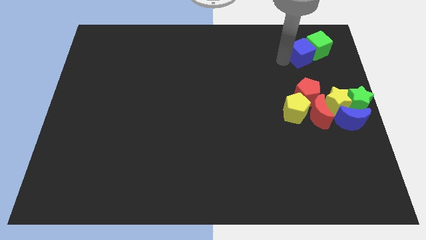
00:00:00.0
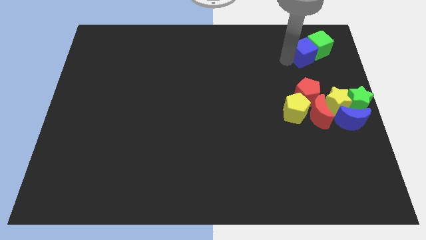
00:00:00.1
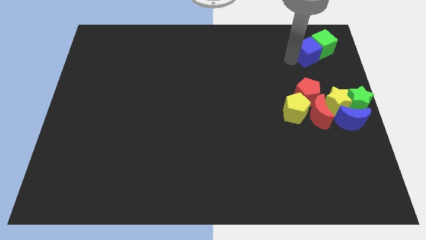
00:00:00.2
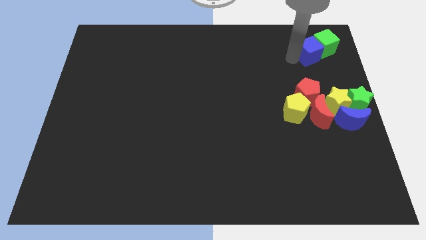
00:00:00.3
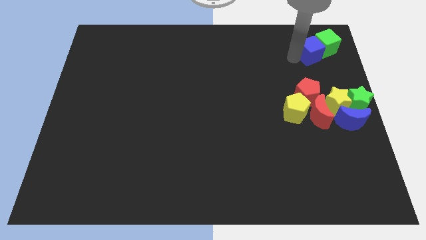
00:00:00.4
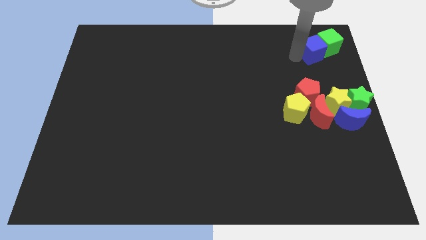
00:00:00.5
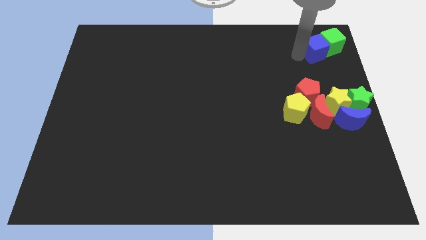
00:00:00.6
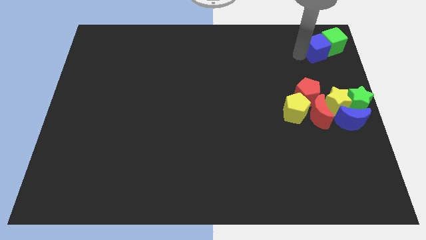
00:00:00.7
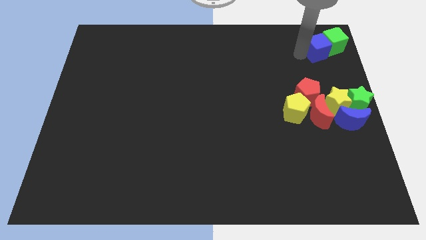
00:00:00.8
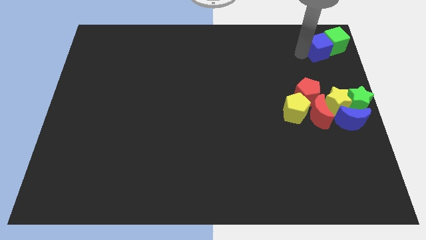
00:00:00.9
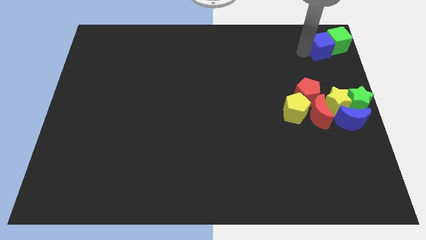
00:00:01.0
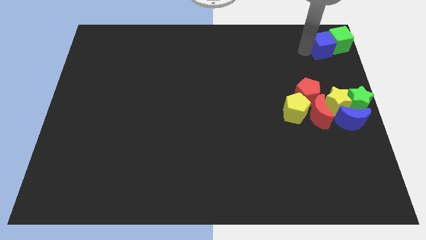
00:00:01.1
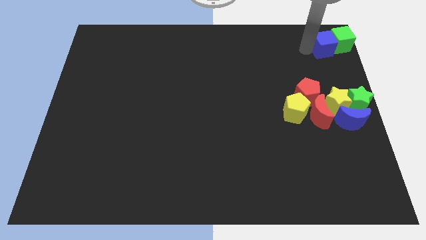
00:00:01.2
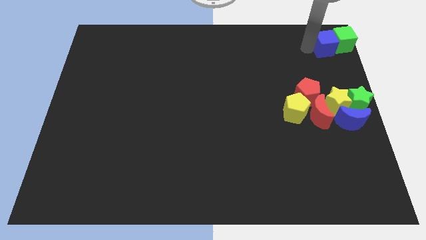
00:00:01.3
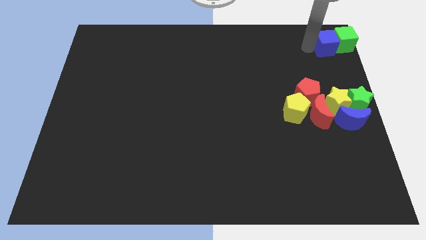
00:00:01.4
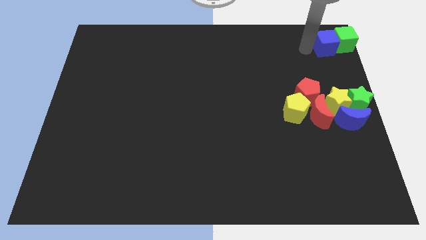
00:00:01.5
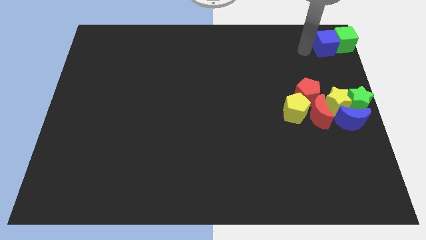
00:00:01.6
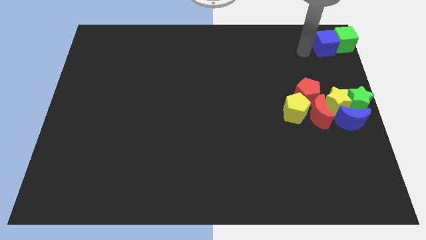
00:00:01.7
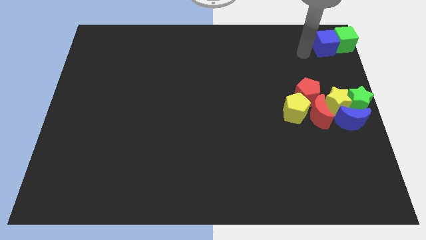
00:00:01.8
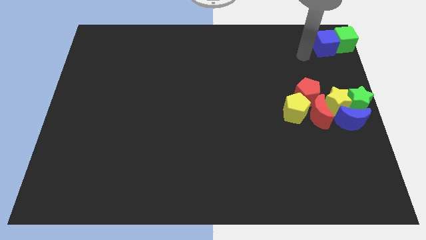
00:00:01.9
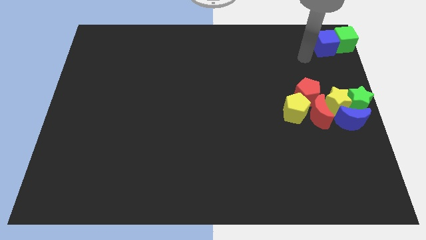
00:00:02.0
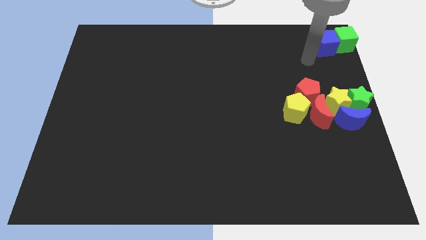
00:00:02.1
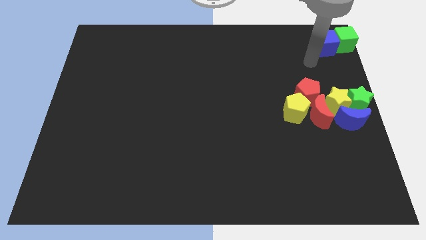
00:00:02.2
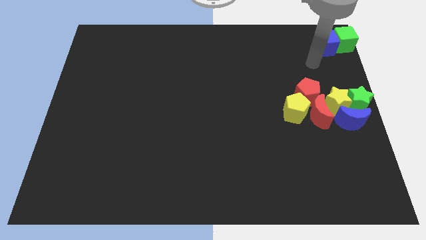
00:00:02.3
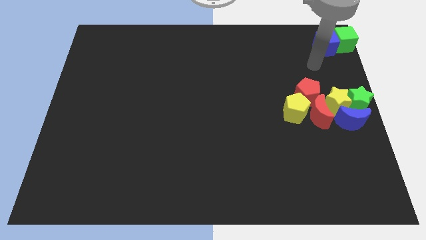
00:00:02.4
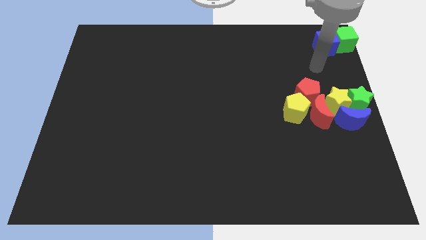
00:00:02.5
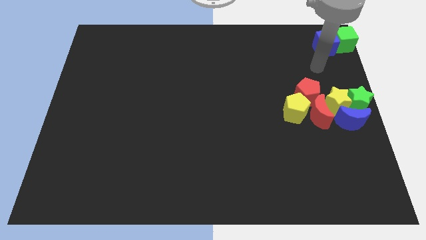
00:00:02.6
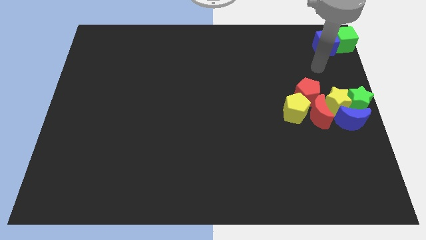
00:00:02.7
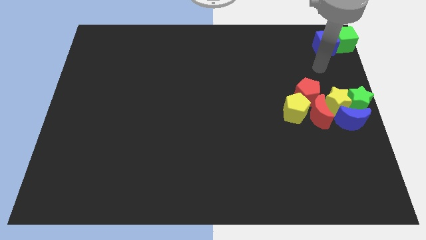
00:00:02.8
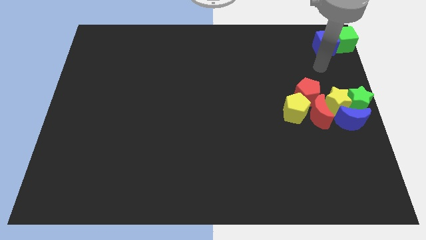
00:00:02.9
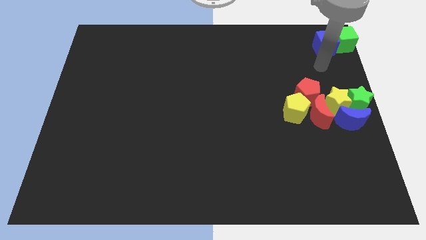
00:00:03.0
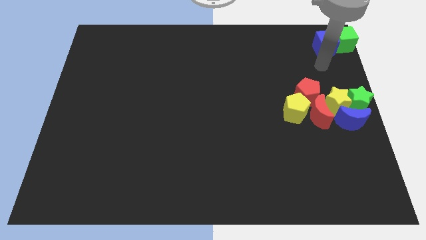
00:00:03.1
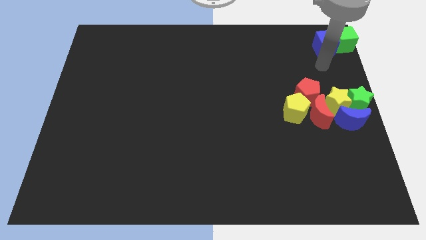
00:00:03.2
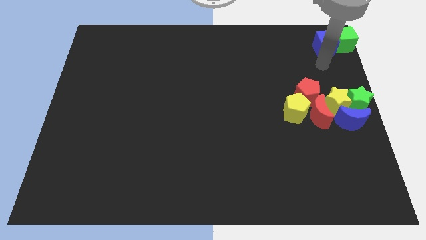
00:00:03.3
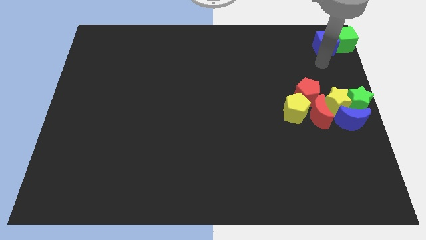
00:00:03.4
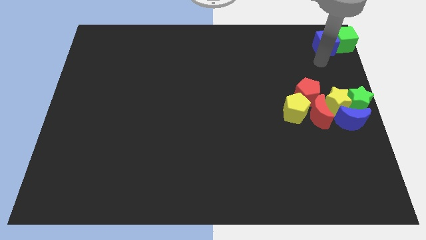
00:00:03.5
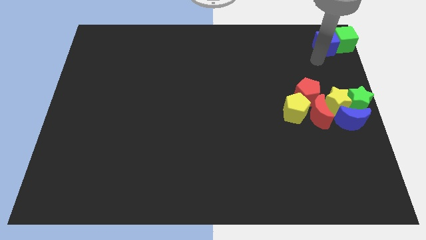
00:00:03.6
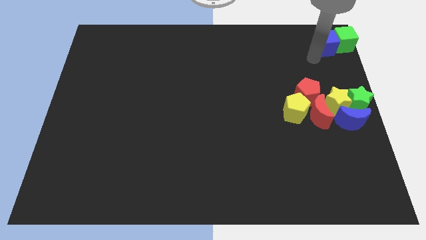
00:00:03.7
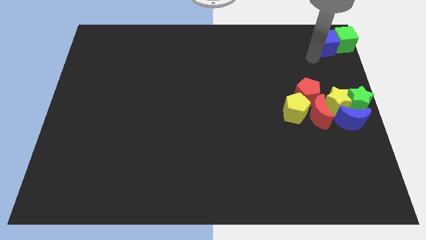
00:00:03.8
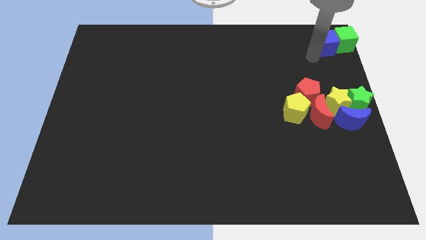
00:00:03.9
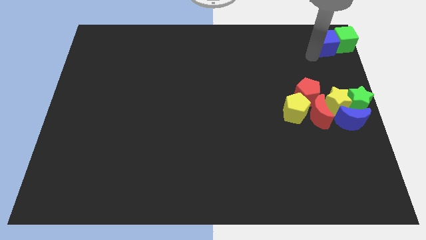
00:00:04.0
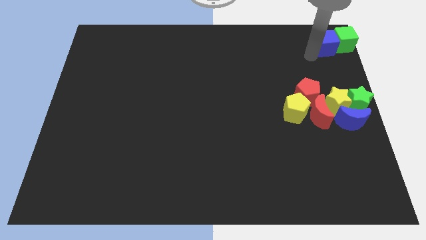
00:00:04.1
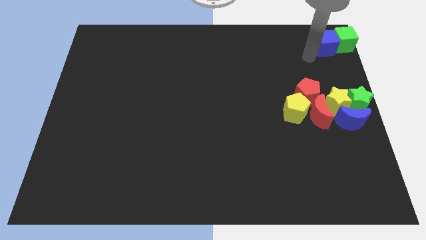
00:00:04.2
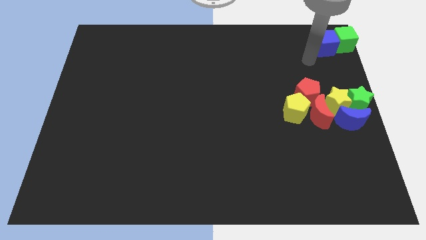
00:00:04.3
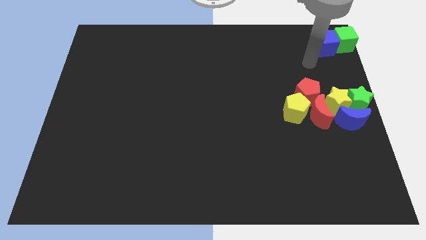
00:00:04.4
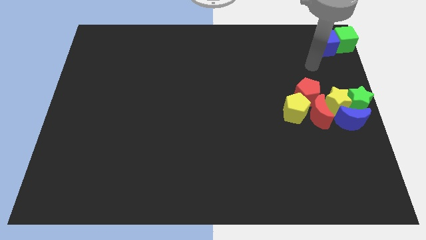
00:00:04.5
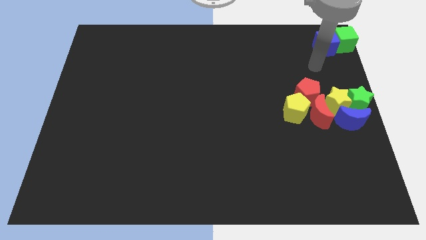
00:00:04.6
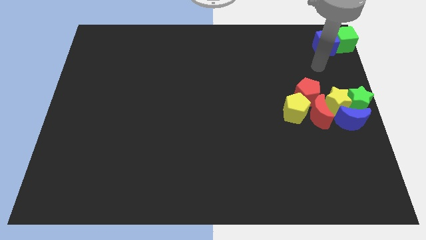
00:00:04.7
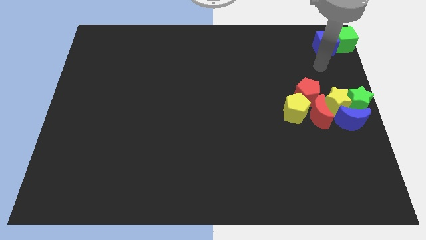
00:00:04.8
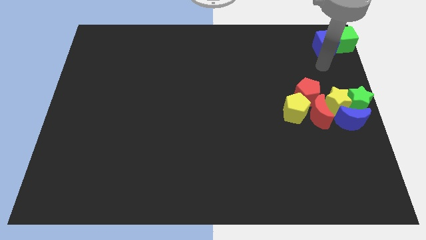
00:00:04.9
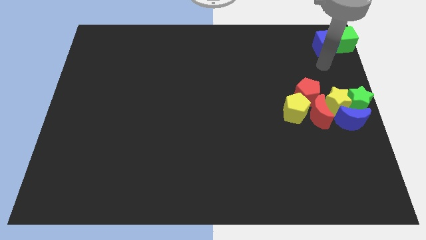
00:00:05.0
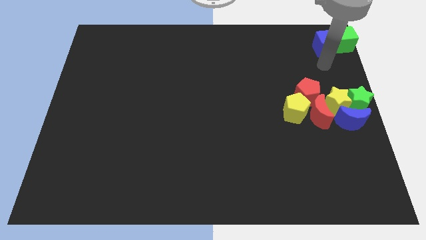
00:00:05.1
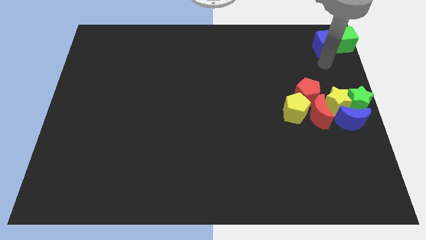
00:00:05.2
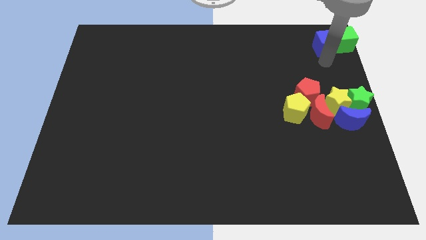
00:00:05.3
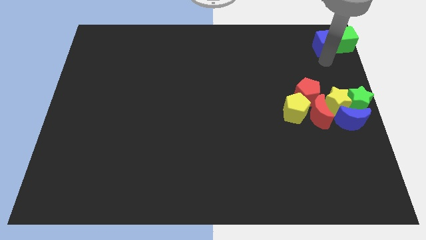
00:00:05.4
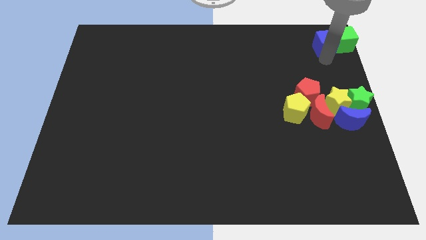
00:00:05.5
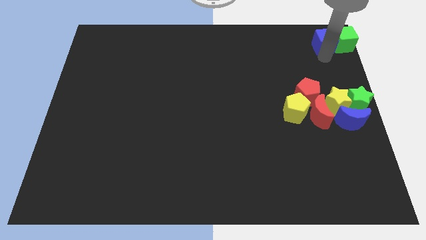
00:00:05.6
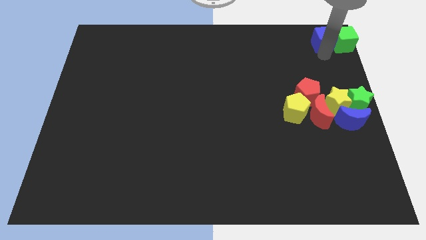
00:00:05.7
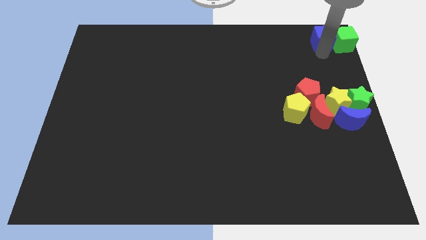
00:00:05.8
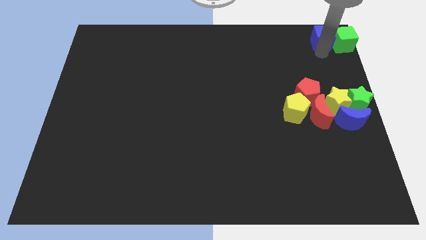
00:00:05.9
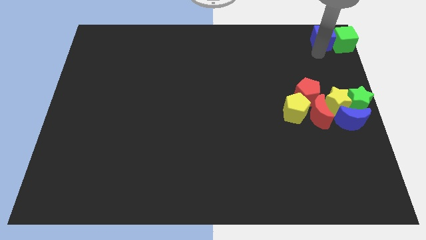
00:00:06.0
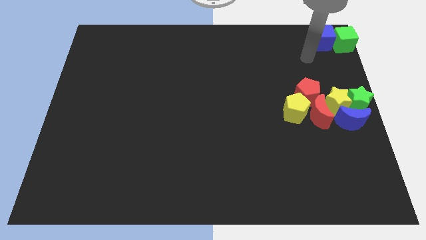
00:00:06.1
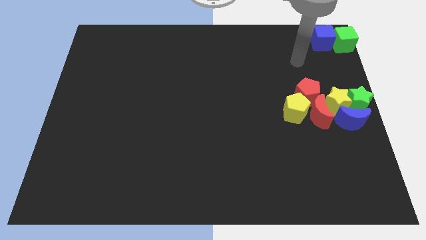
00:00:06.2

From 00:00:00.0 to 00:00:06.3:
move the cubes to the right of the board

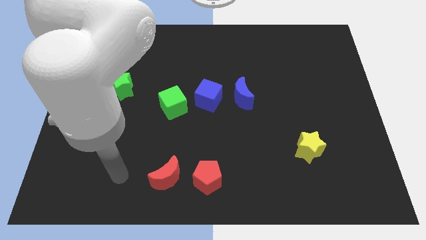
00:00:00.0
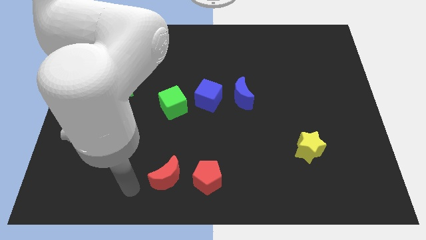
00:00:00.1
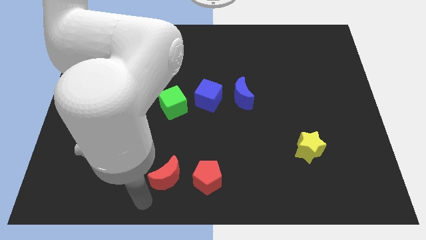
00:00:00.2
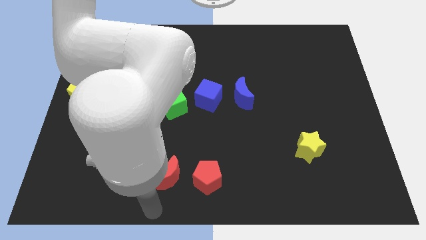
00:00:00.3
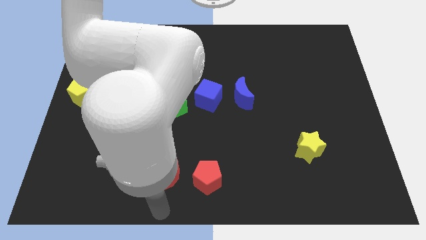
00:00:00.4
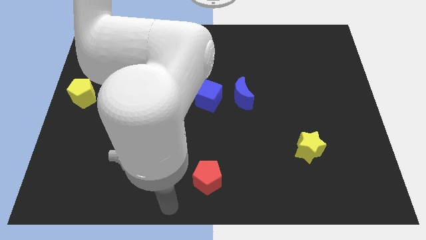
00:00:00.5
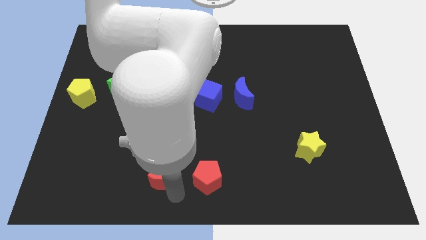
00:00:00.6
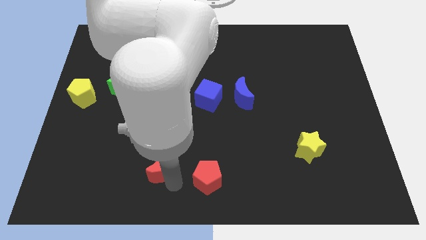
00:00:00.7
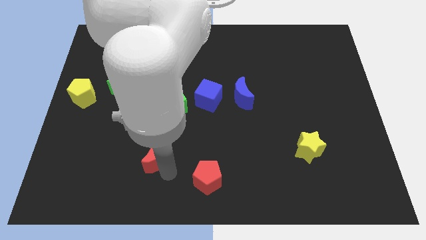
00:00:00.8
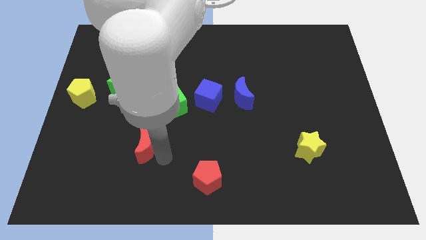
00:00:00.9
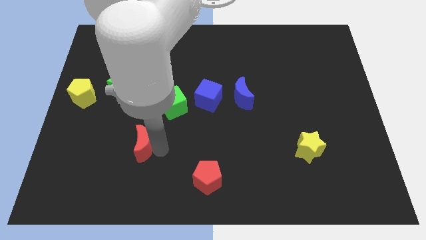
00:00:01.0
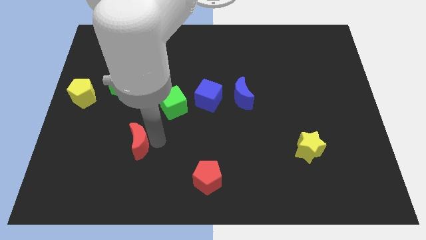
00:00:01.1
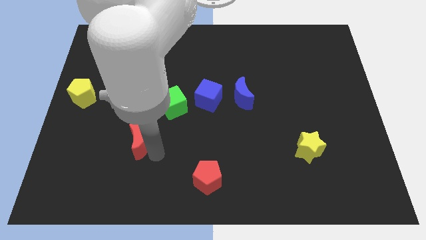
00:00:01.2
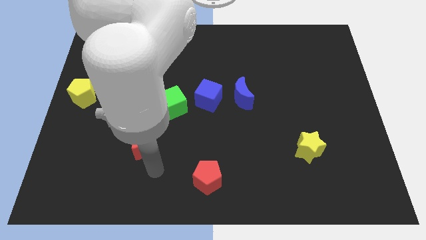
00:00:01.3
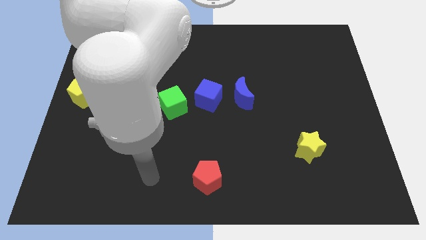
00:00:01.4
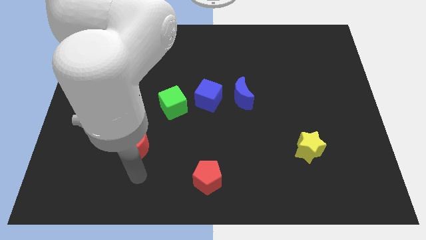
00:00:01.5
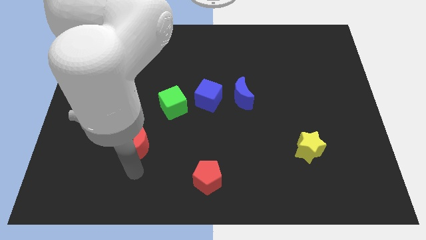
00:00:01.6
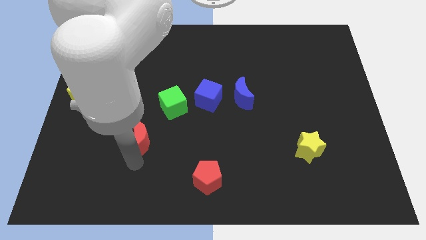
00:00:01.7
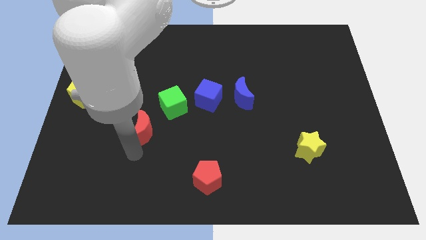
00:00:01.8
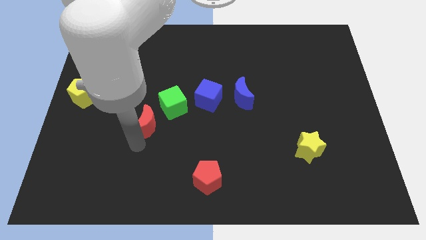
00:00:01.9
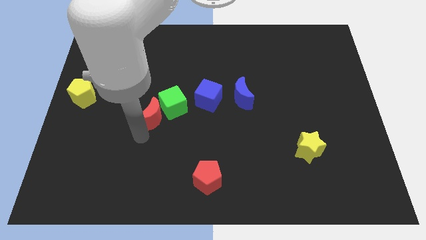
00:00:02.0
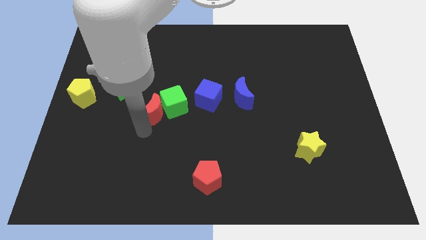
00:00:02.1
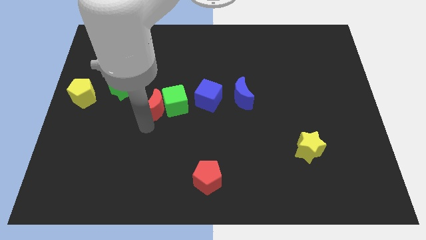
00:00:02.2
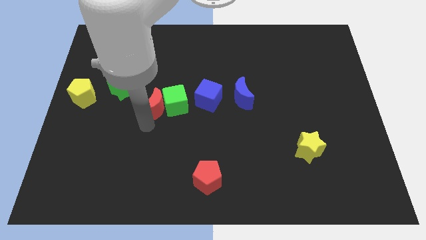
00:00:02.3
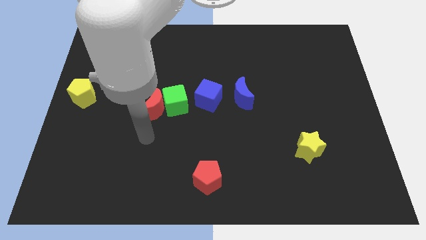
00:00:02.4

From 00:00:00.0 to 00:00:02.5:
slide the red moon into the green cube

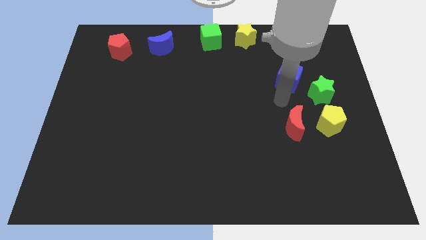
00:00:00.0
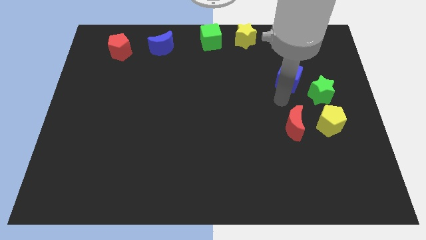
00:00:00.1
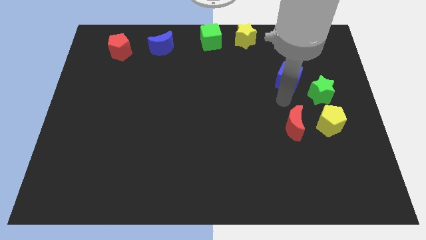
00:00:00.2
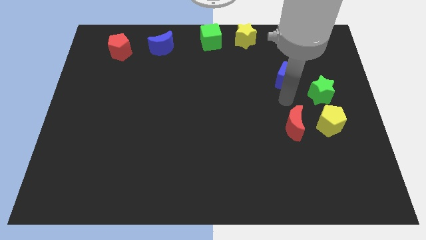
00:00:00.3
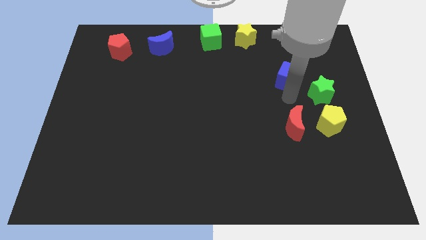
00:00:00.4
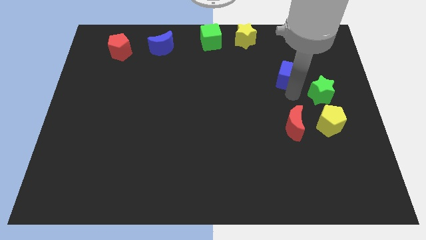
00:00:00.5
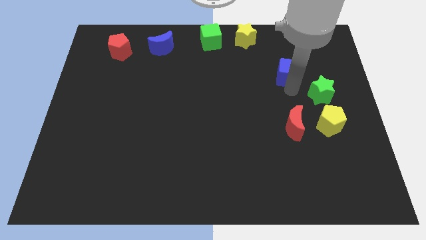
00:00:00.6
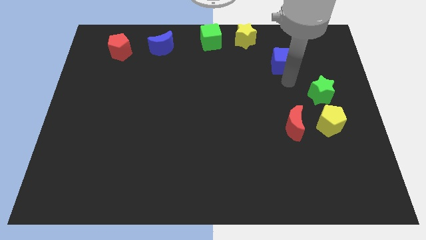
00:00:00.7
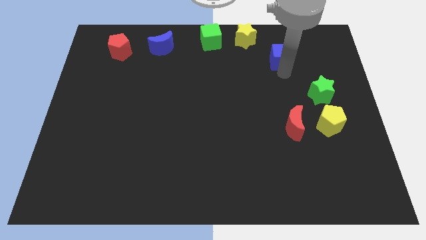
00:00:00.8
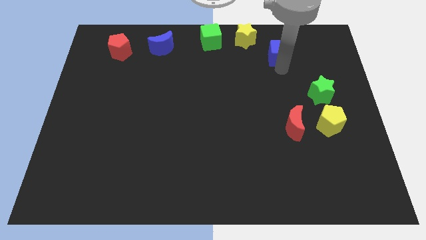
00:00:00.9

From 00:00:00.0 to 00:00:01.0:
place the blue cube diagonal to the yellow star
